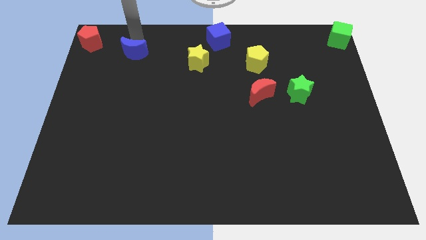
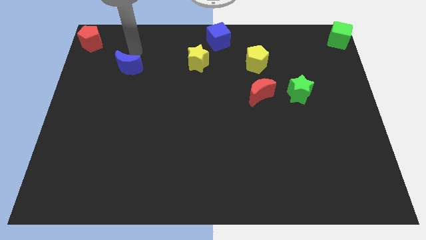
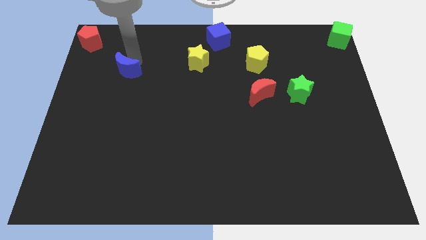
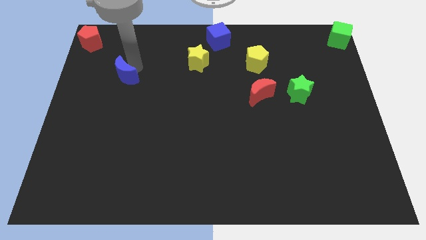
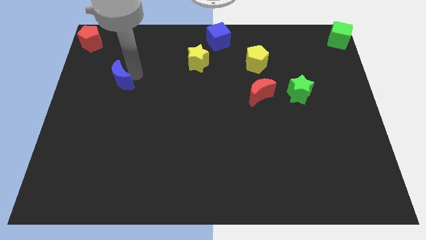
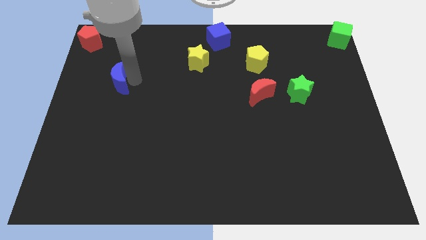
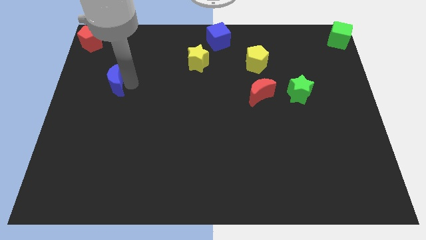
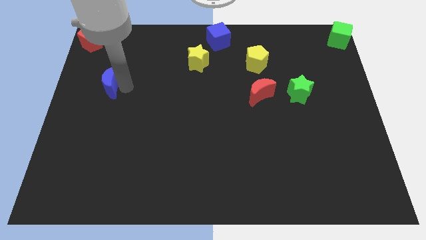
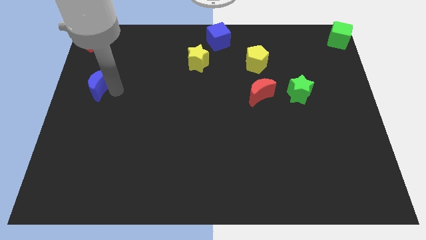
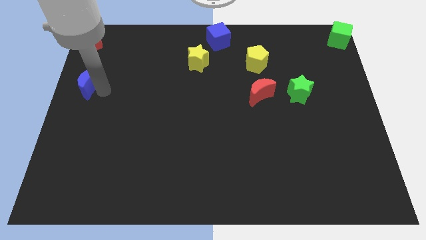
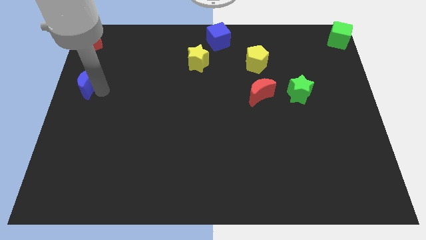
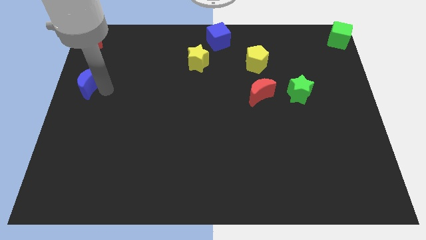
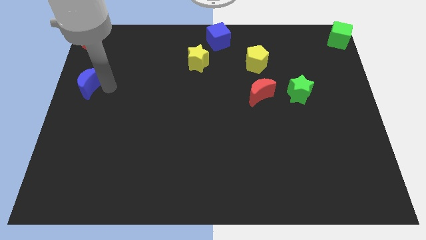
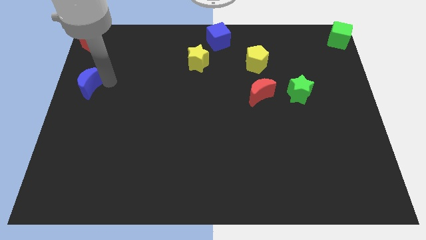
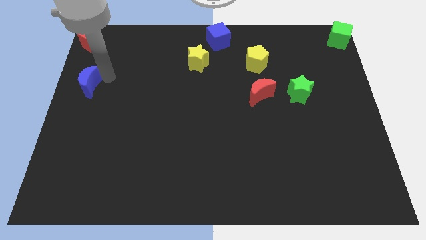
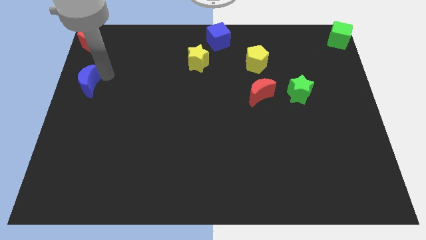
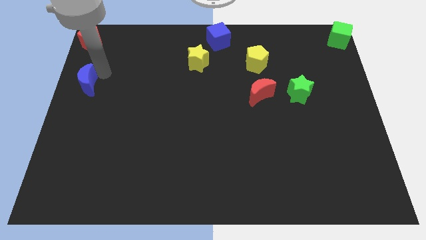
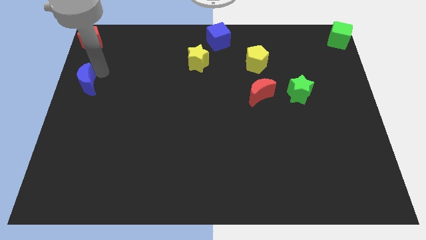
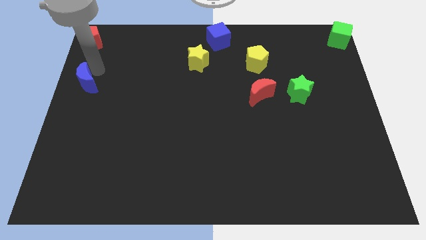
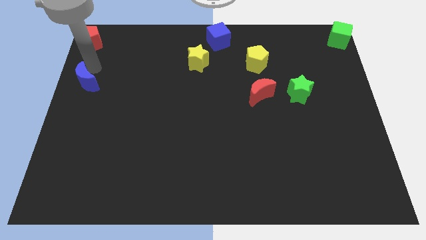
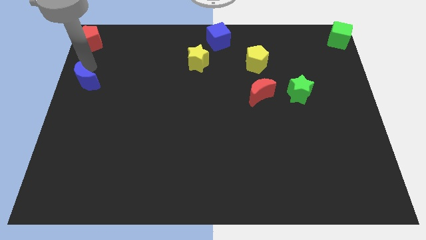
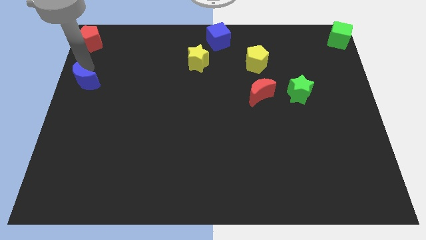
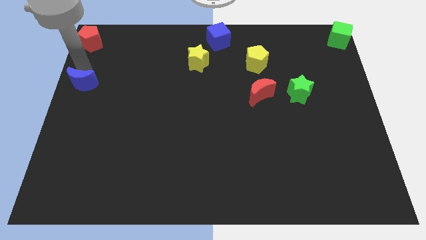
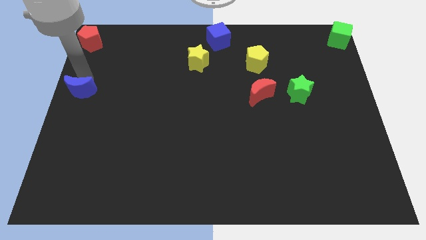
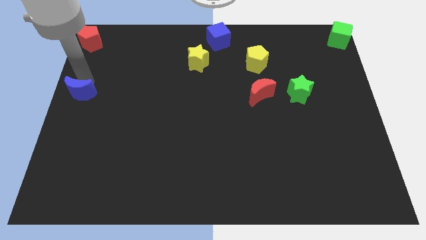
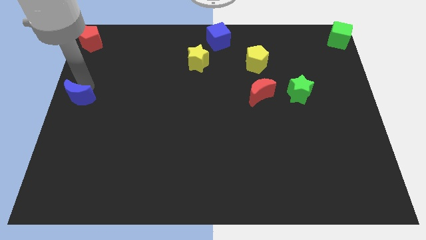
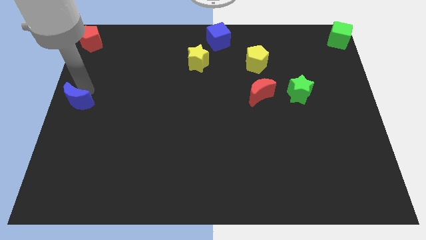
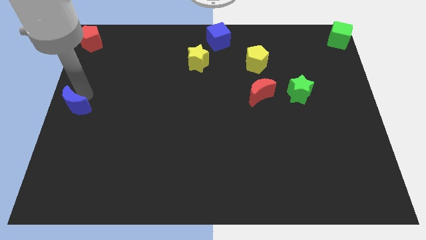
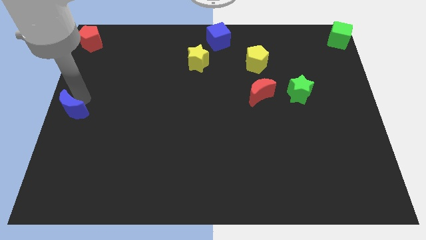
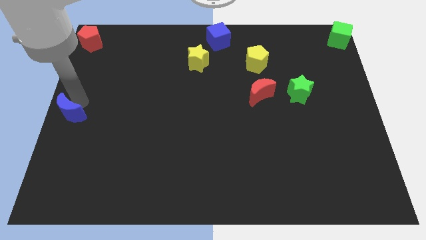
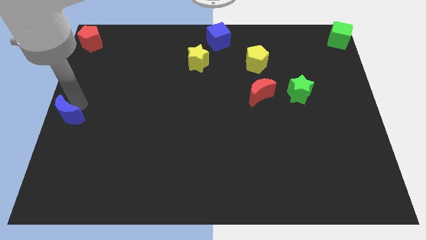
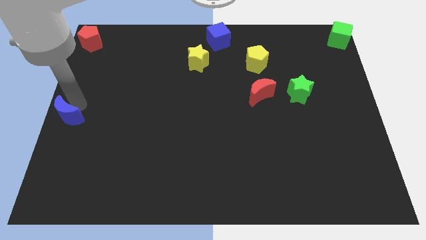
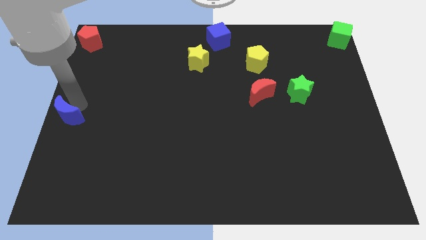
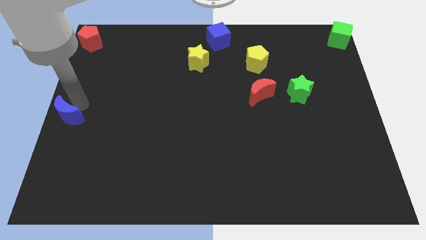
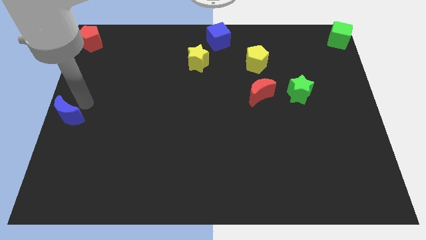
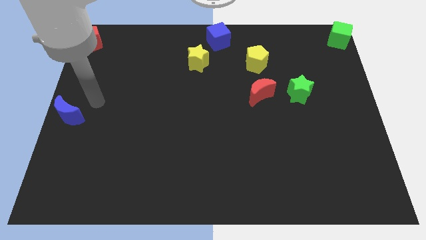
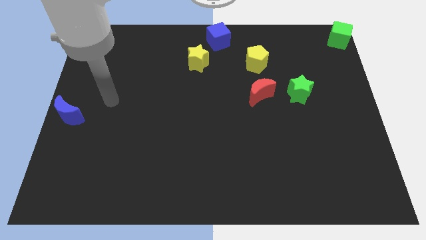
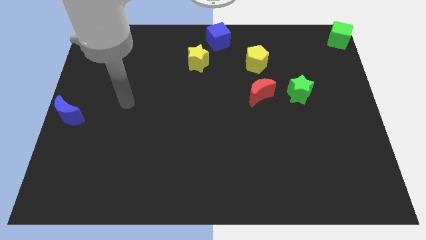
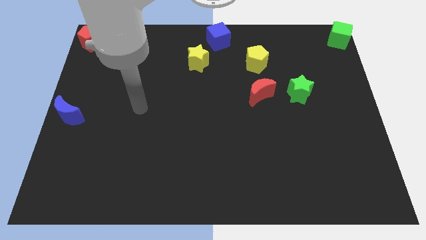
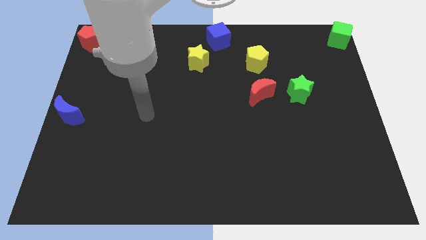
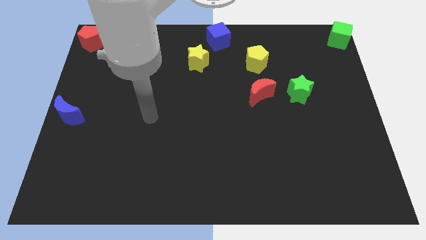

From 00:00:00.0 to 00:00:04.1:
place blue moon at the center left

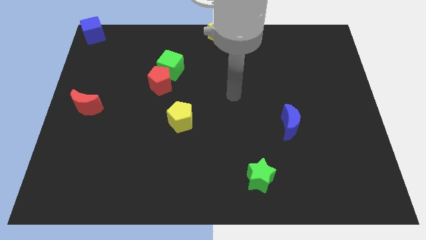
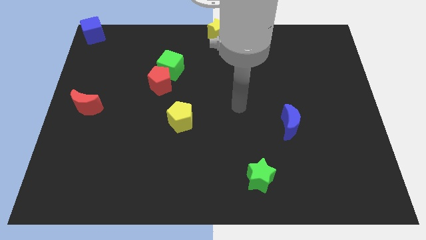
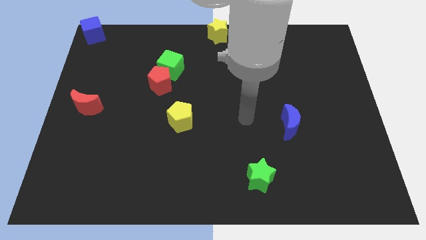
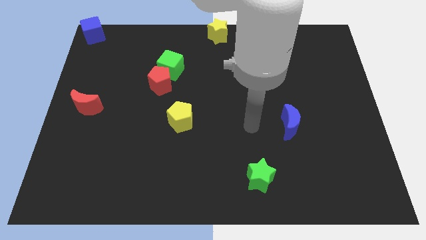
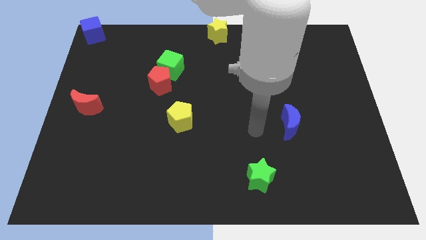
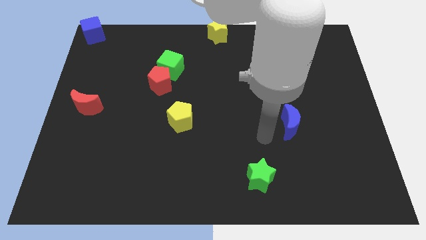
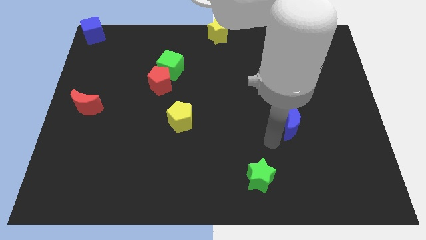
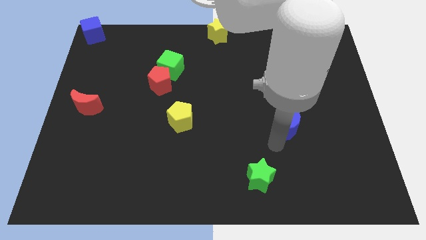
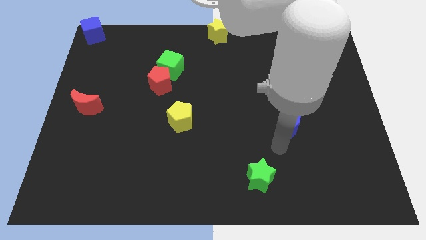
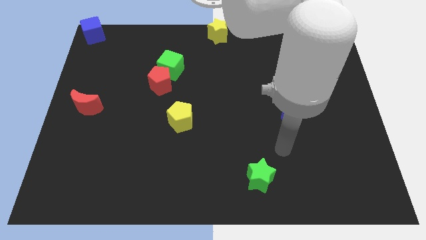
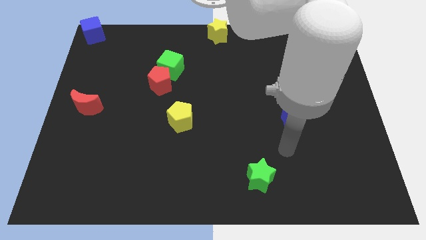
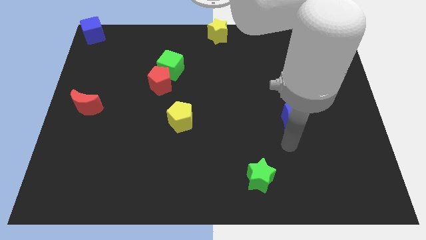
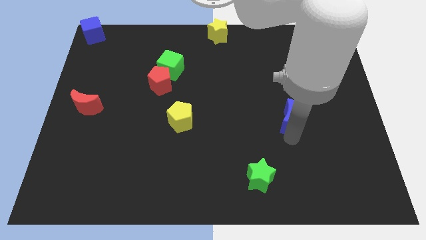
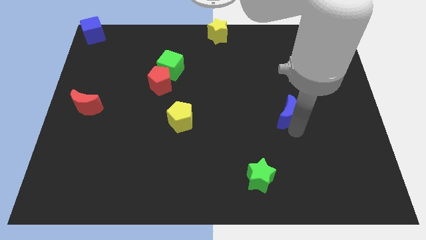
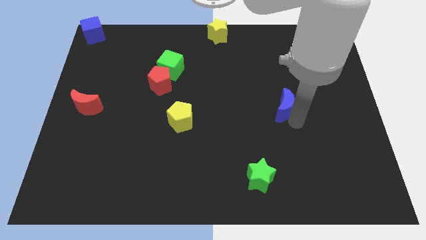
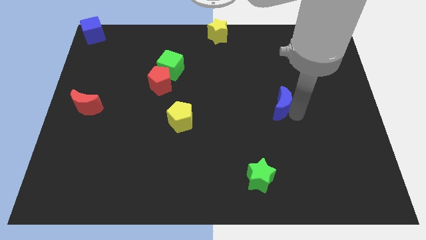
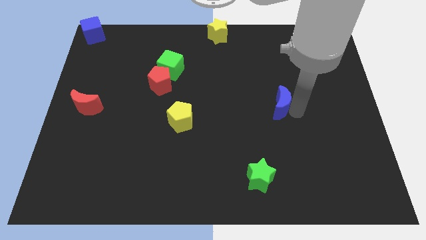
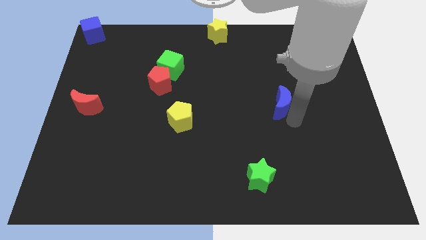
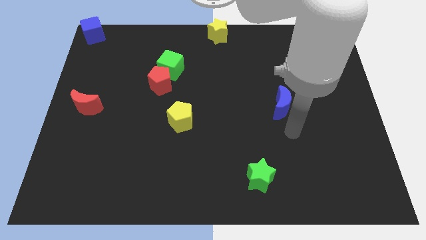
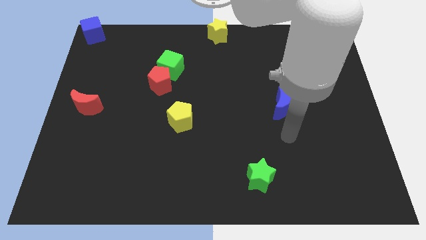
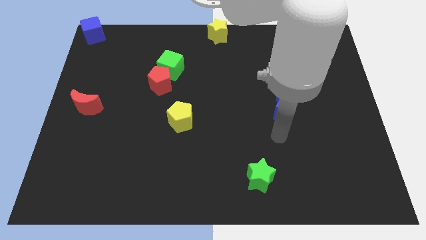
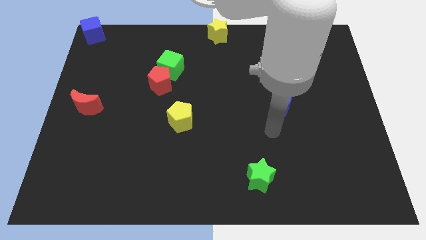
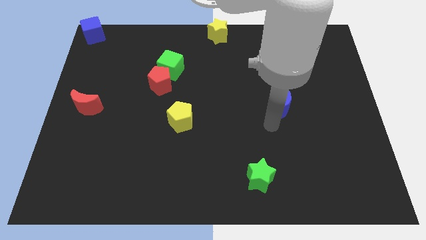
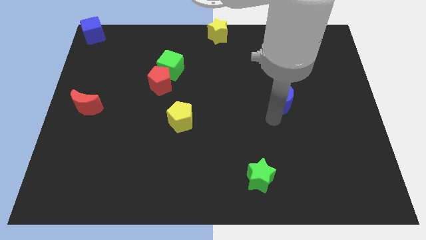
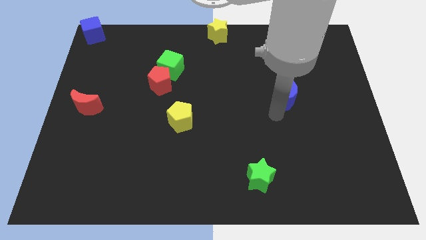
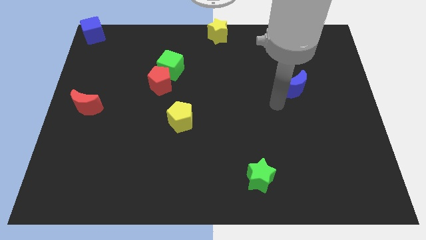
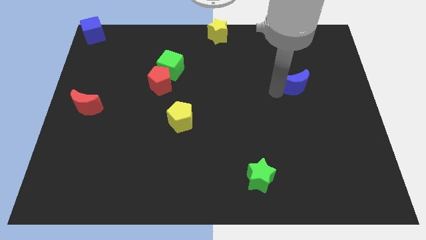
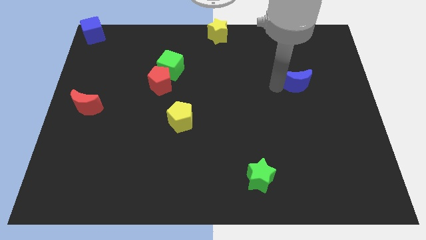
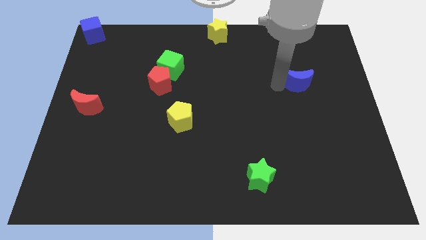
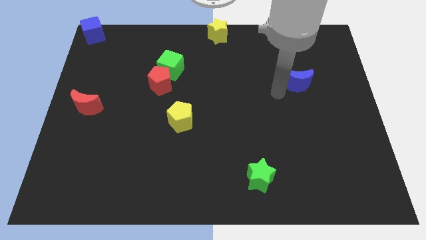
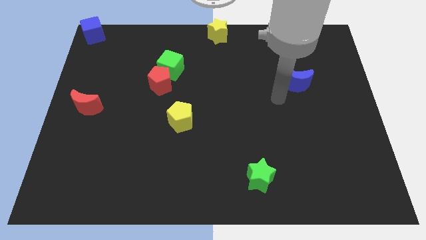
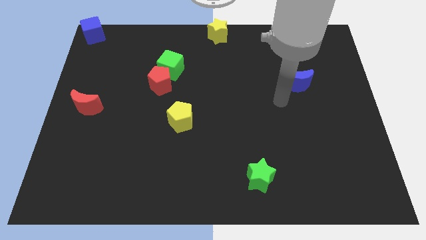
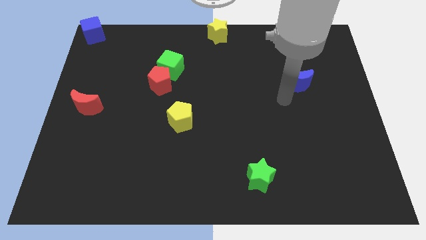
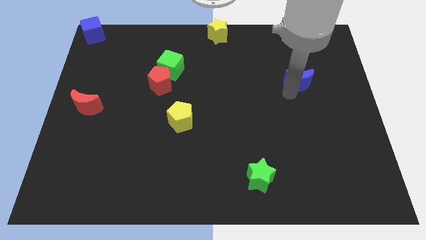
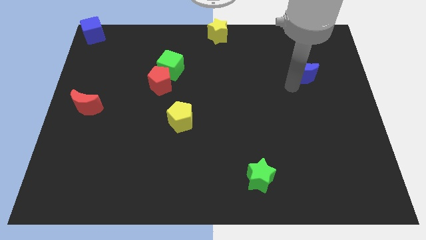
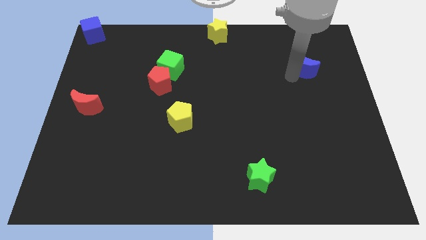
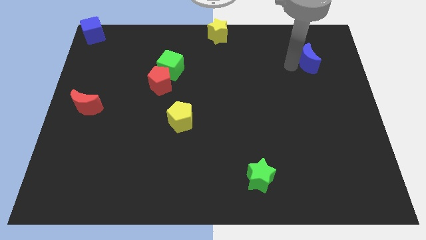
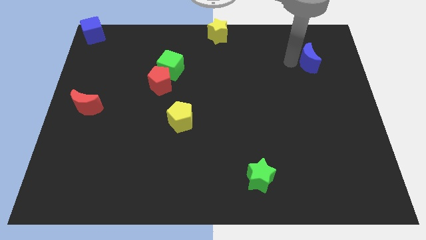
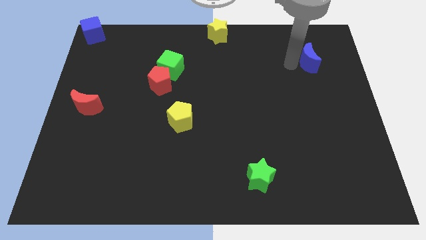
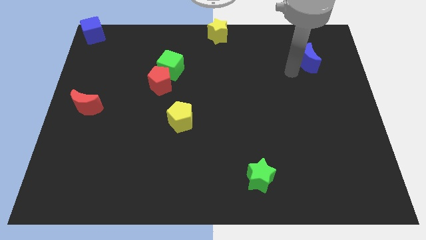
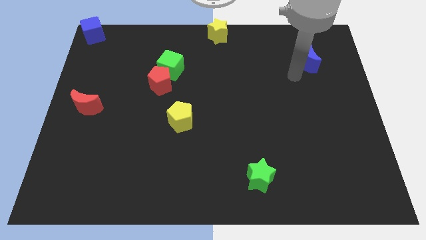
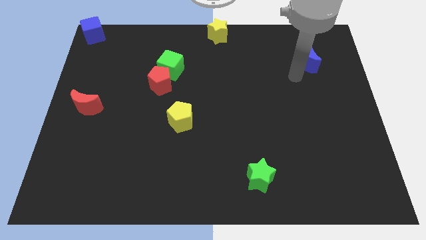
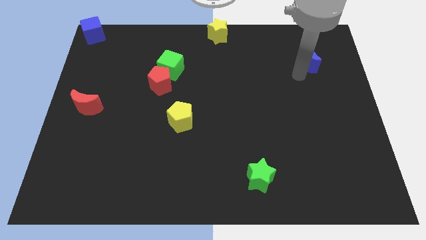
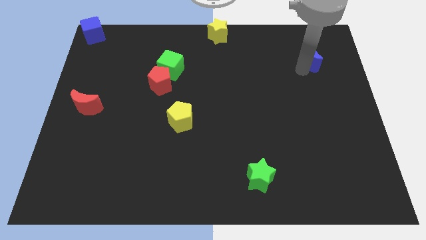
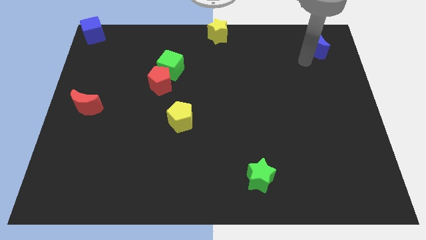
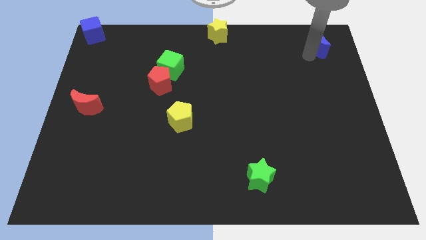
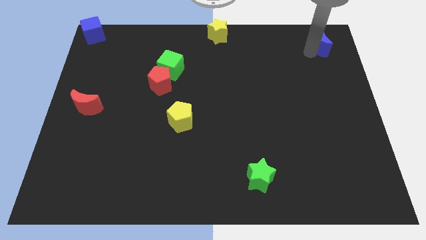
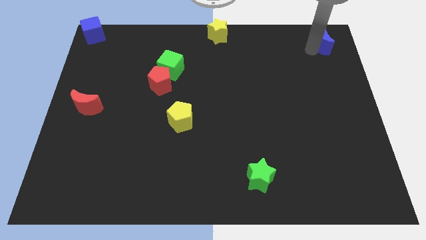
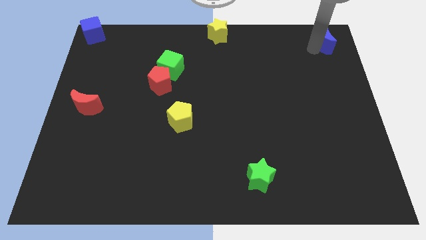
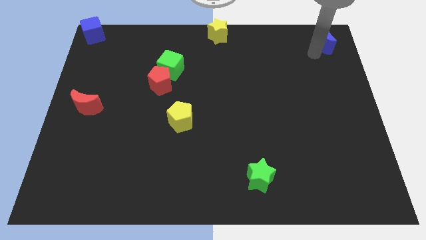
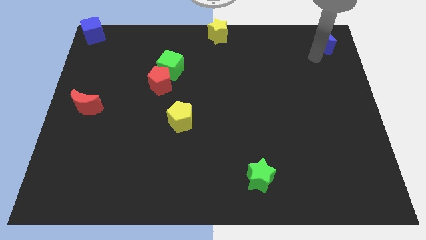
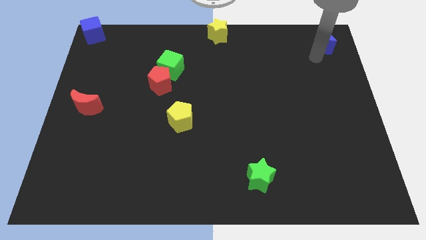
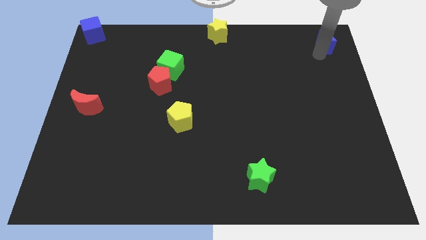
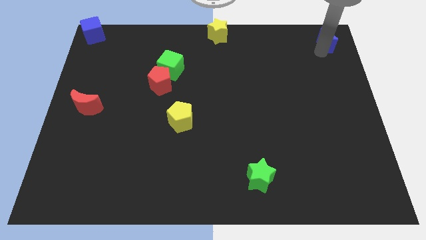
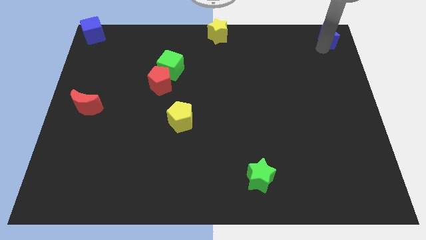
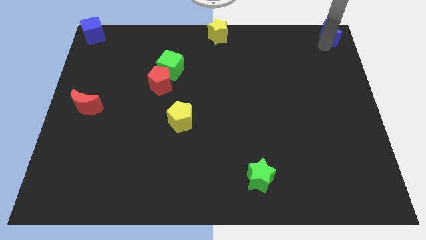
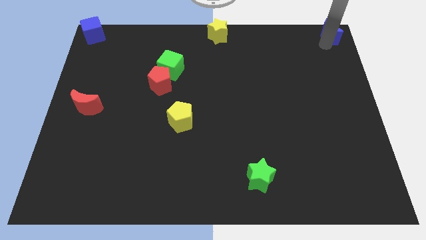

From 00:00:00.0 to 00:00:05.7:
push the blue crescent towards the top right of the board
